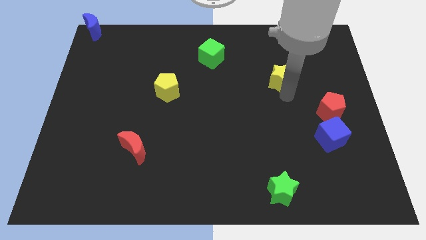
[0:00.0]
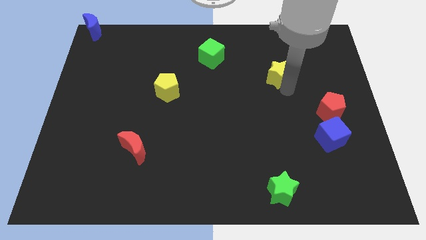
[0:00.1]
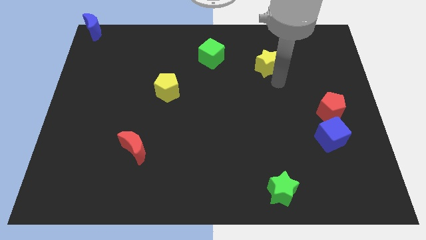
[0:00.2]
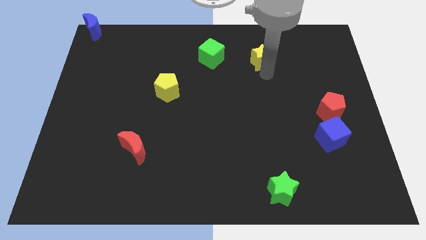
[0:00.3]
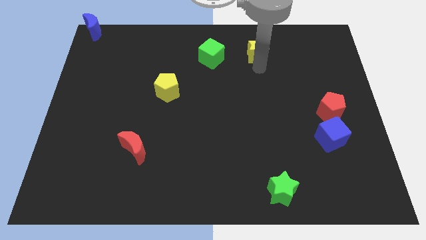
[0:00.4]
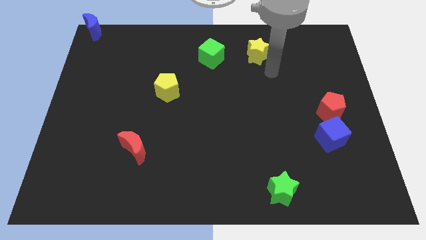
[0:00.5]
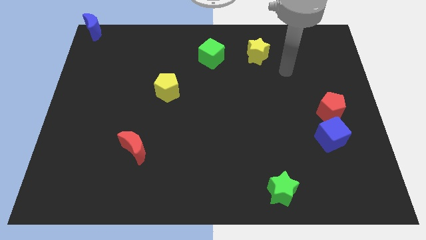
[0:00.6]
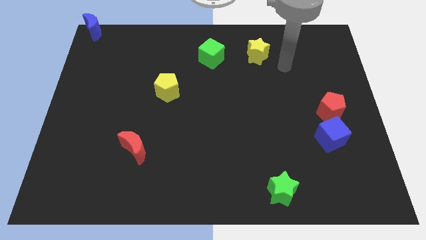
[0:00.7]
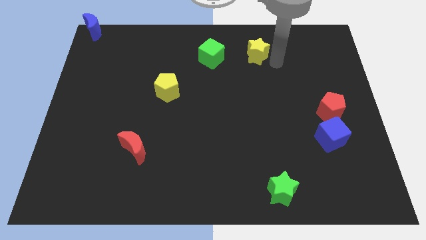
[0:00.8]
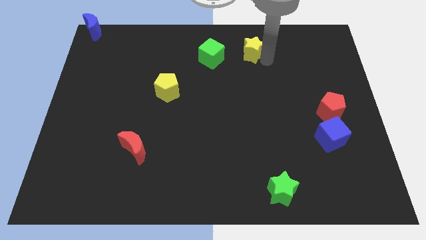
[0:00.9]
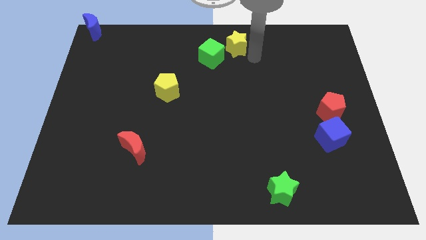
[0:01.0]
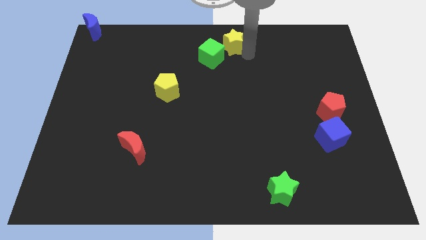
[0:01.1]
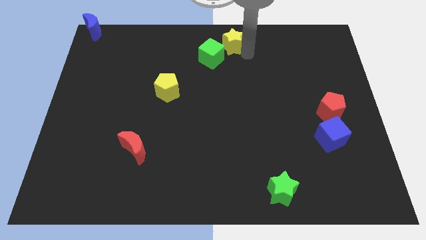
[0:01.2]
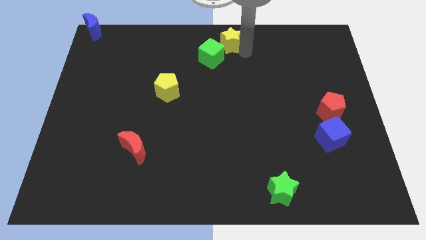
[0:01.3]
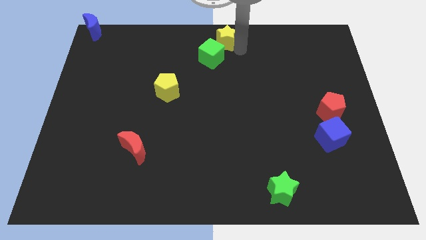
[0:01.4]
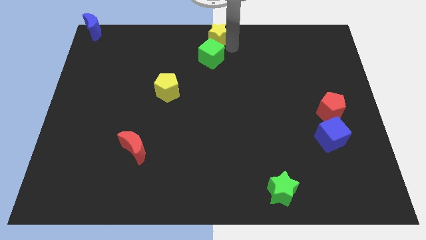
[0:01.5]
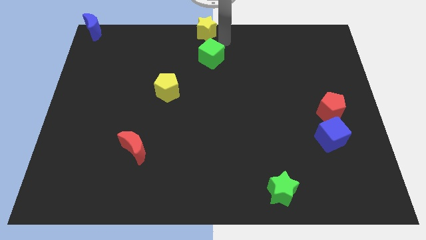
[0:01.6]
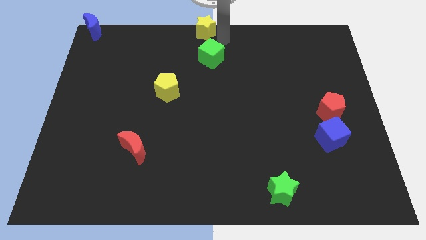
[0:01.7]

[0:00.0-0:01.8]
push the yellow star at the top center of the table

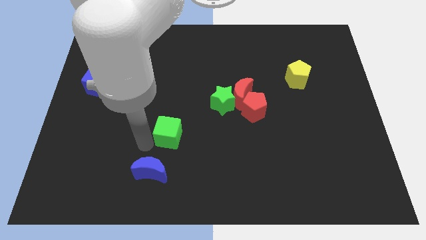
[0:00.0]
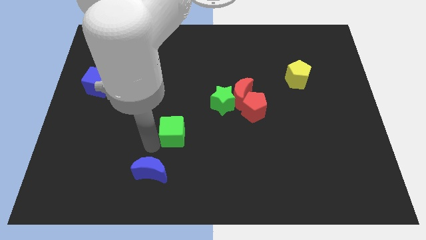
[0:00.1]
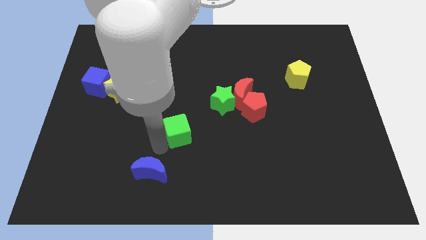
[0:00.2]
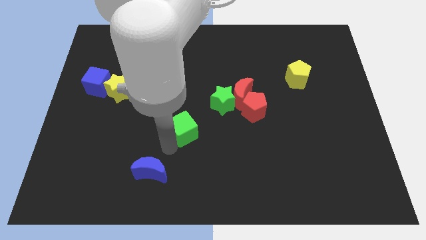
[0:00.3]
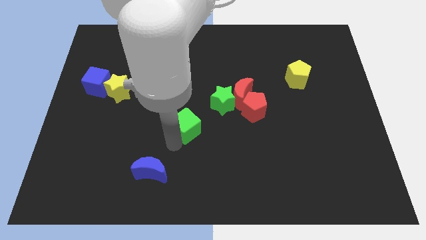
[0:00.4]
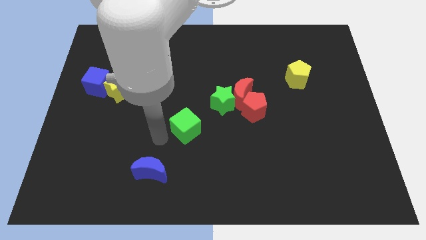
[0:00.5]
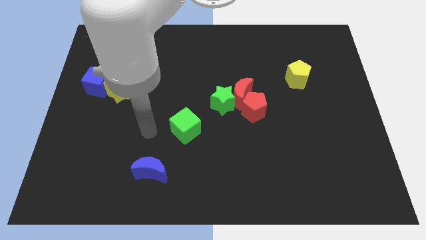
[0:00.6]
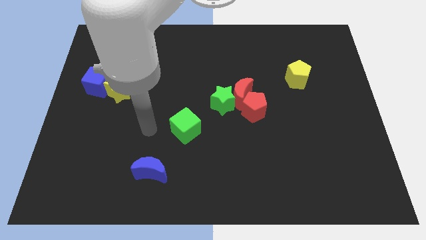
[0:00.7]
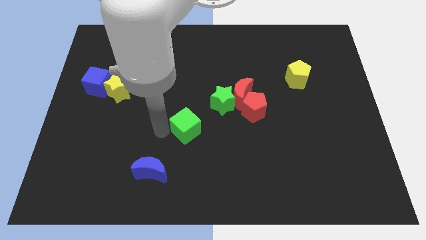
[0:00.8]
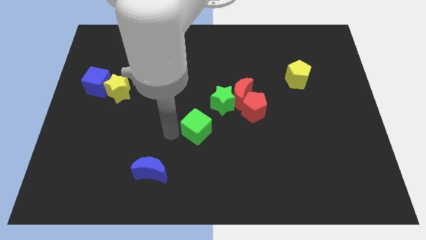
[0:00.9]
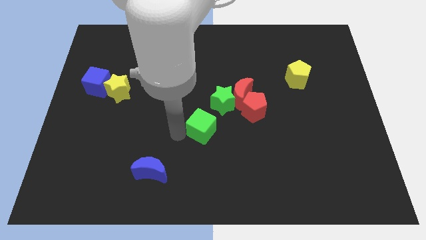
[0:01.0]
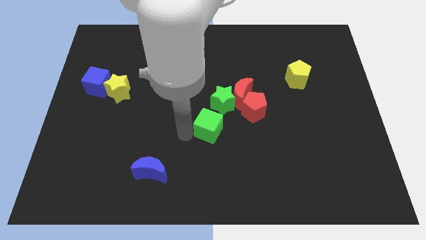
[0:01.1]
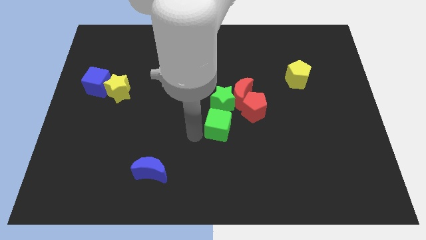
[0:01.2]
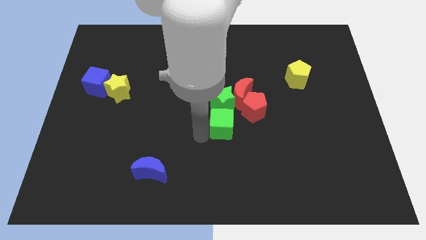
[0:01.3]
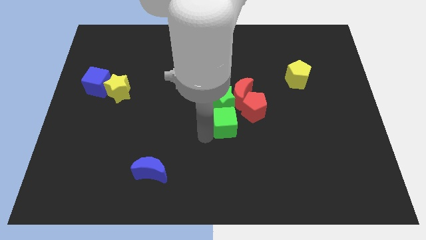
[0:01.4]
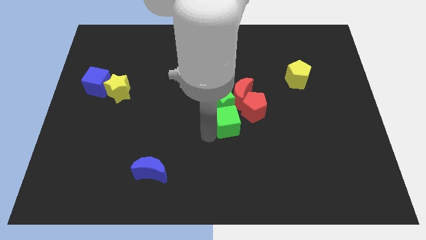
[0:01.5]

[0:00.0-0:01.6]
push the green cube below the green star

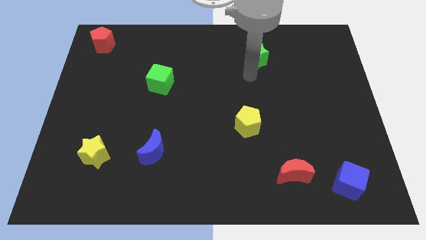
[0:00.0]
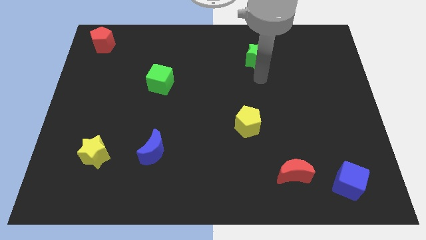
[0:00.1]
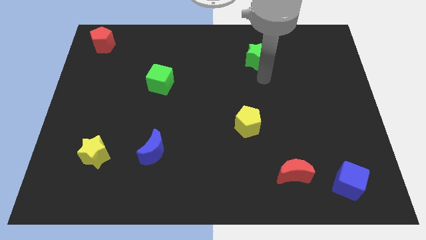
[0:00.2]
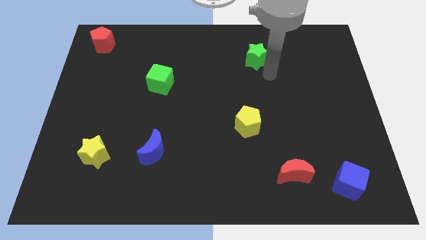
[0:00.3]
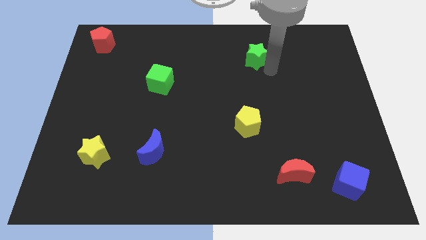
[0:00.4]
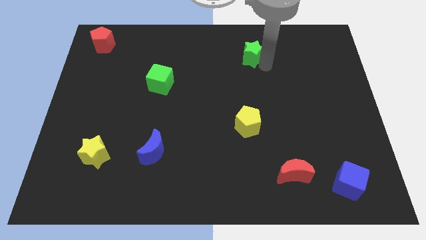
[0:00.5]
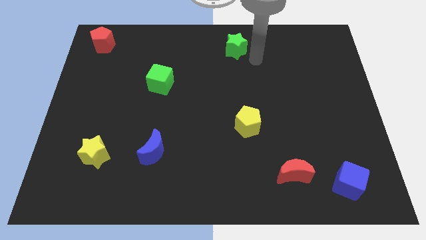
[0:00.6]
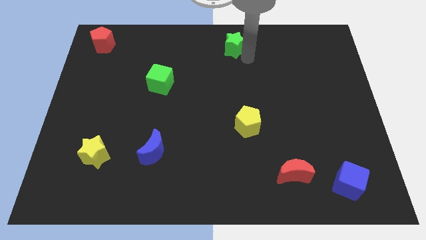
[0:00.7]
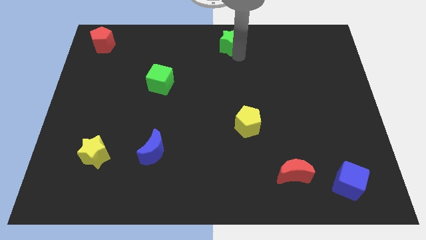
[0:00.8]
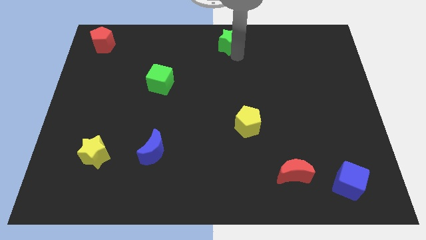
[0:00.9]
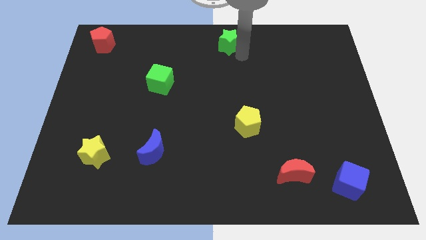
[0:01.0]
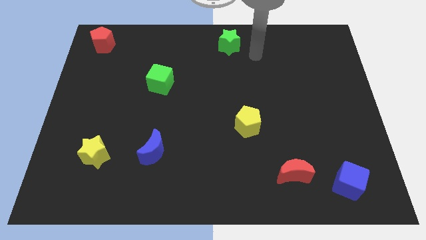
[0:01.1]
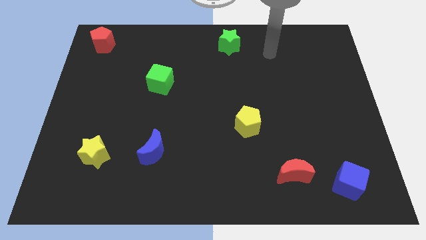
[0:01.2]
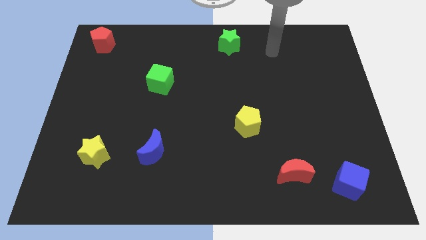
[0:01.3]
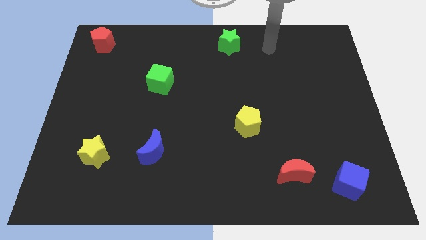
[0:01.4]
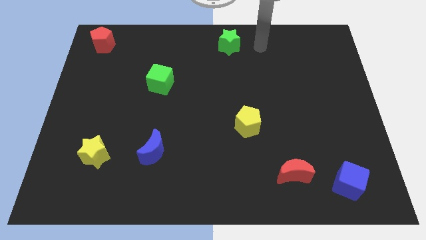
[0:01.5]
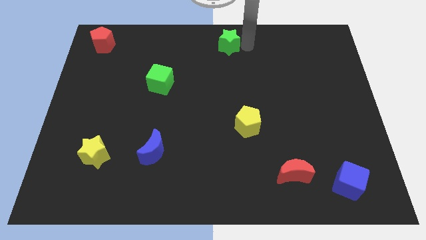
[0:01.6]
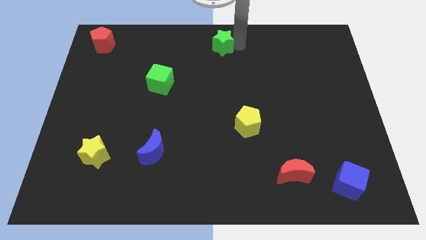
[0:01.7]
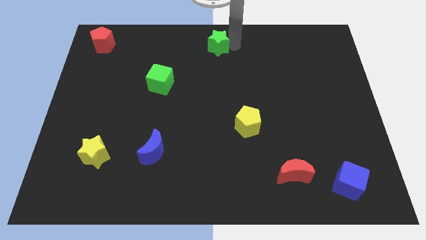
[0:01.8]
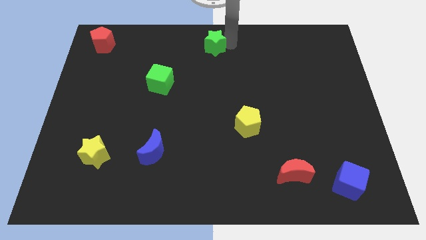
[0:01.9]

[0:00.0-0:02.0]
place the green star at the top center of the board

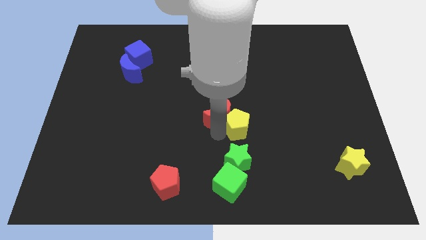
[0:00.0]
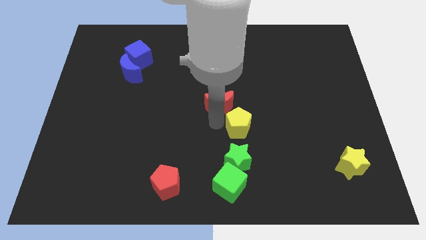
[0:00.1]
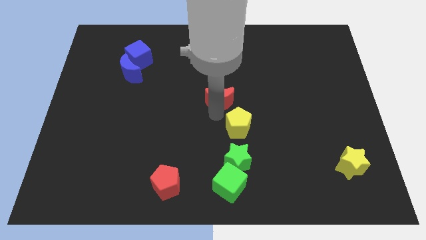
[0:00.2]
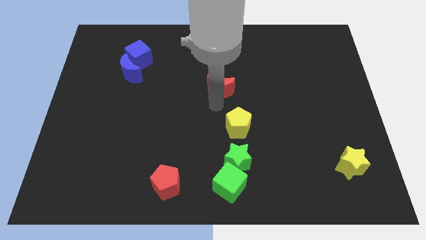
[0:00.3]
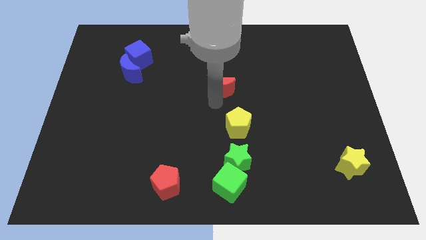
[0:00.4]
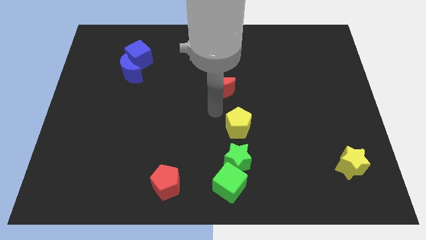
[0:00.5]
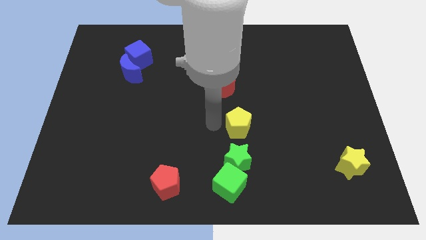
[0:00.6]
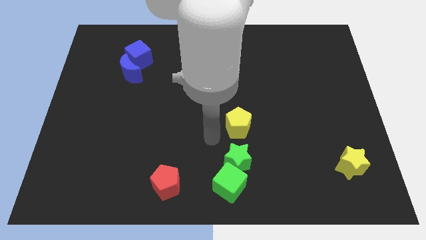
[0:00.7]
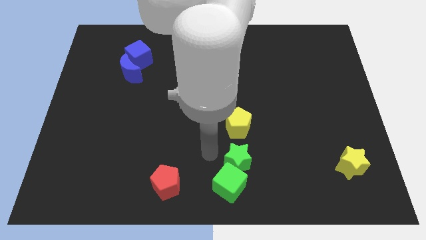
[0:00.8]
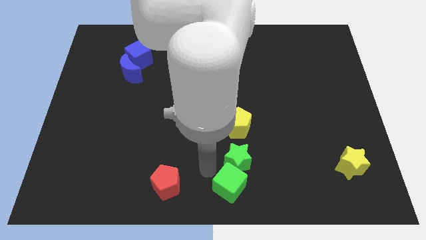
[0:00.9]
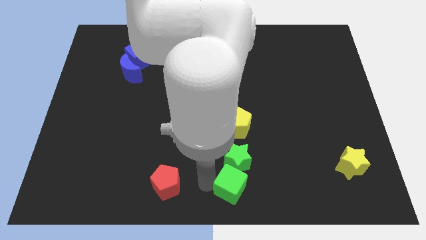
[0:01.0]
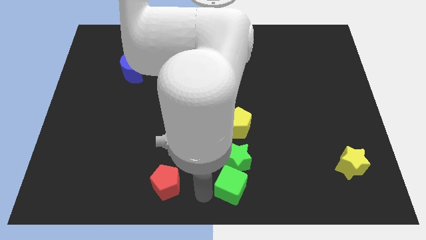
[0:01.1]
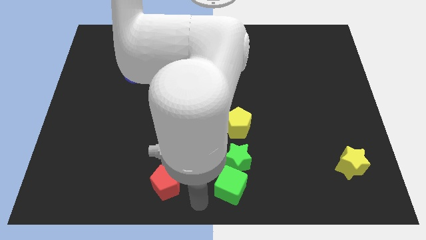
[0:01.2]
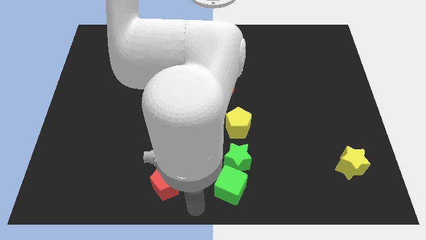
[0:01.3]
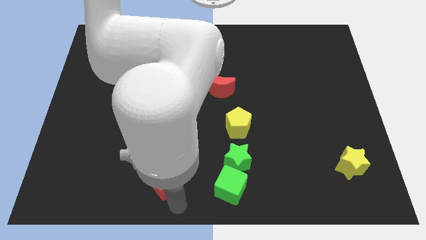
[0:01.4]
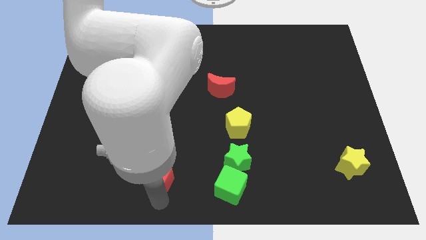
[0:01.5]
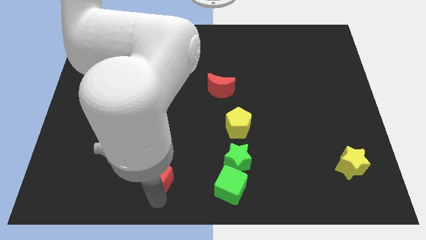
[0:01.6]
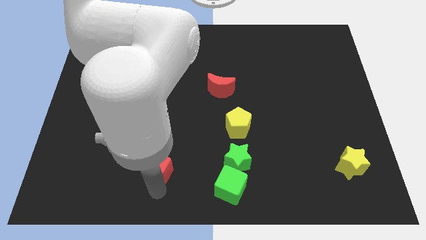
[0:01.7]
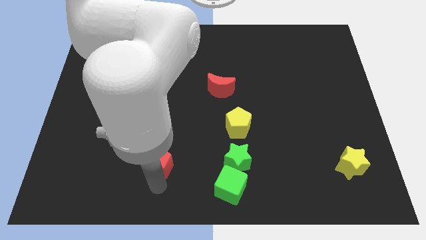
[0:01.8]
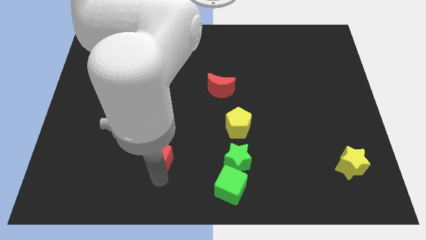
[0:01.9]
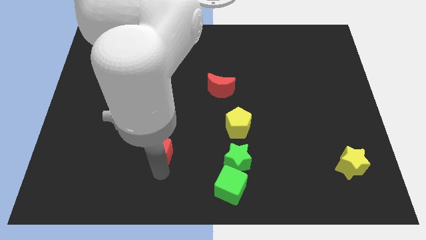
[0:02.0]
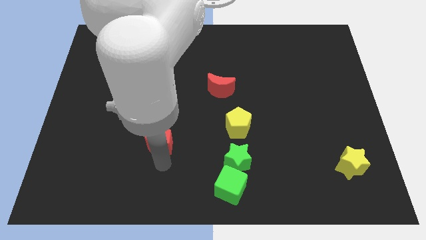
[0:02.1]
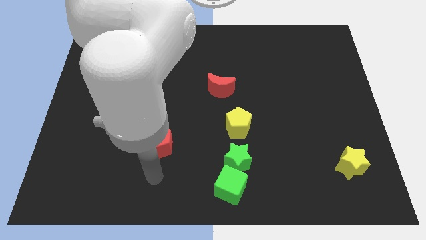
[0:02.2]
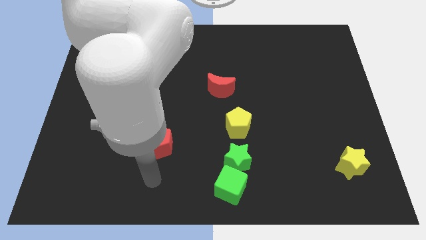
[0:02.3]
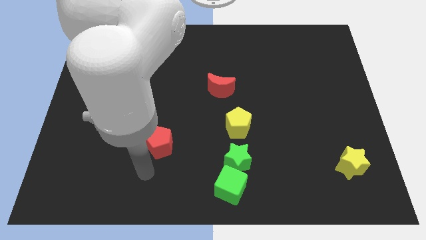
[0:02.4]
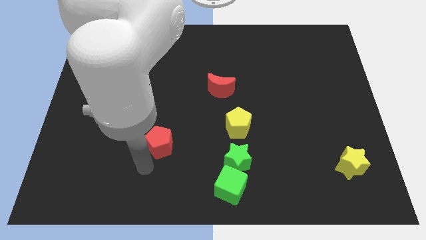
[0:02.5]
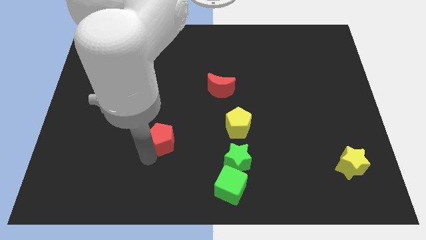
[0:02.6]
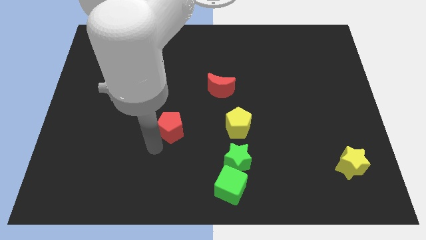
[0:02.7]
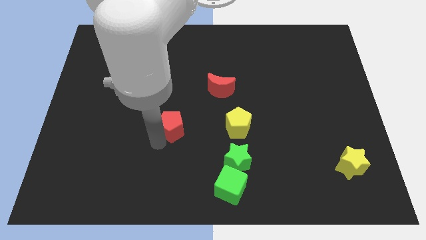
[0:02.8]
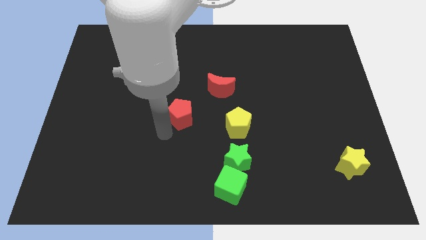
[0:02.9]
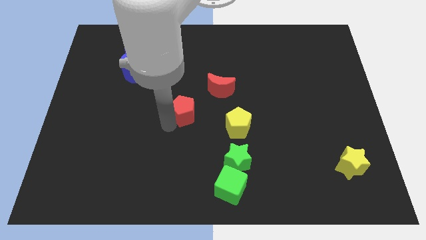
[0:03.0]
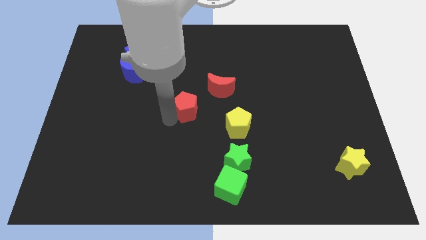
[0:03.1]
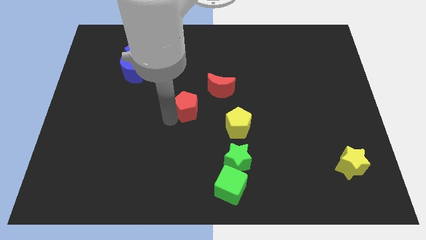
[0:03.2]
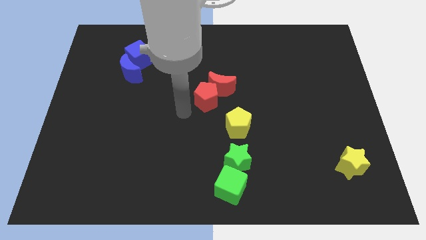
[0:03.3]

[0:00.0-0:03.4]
move the red crescent and red pentagon to the center of the board
